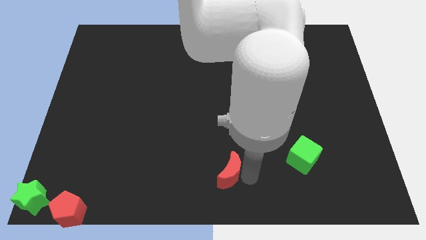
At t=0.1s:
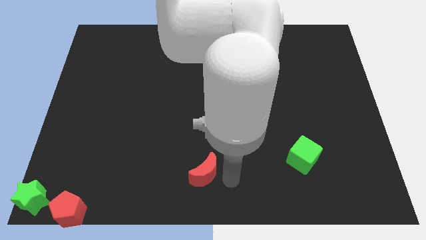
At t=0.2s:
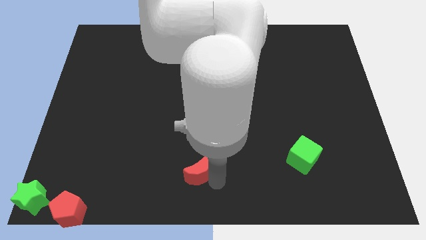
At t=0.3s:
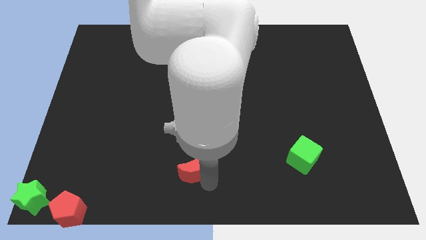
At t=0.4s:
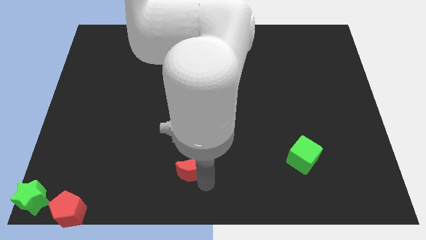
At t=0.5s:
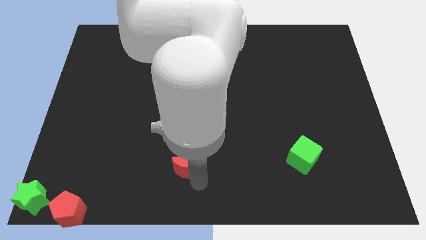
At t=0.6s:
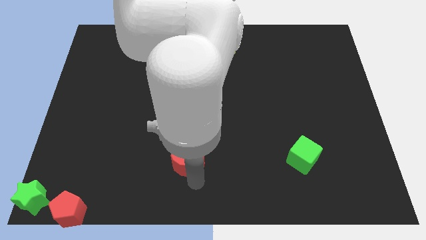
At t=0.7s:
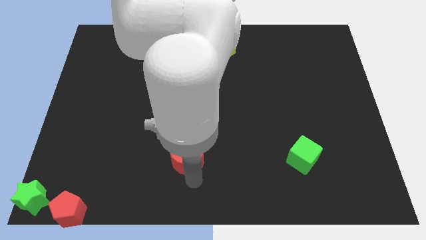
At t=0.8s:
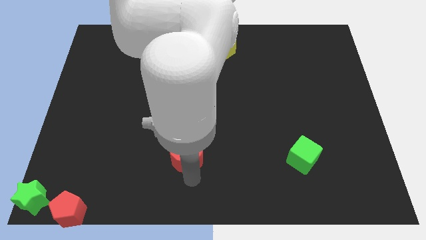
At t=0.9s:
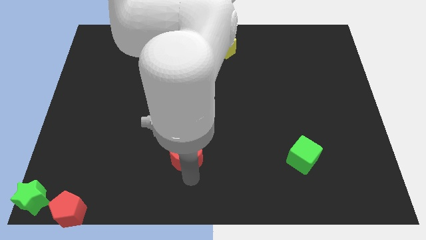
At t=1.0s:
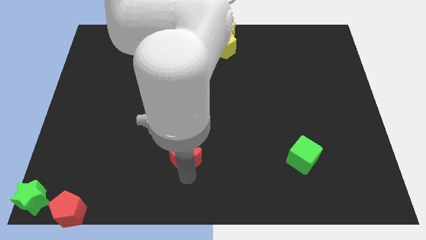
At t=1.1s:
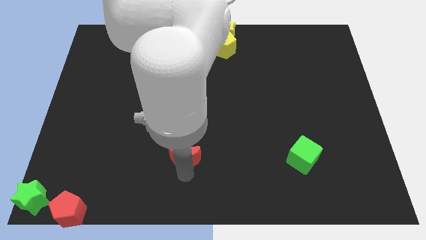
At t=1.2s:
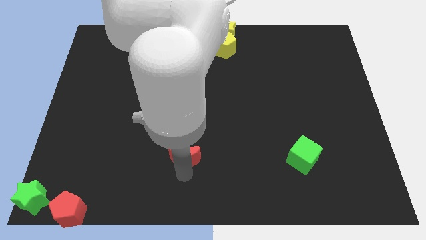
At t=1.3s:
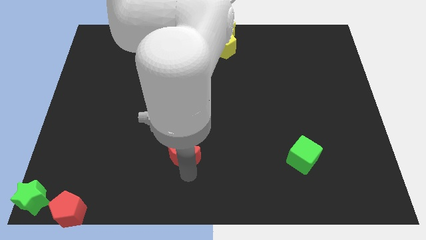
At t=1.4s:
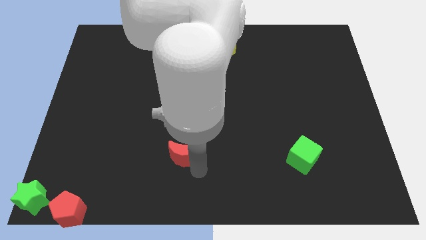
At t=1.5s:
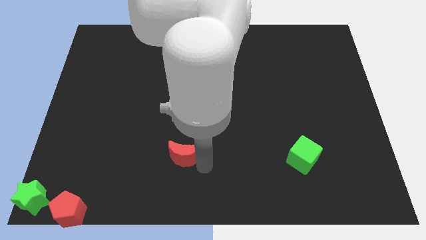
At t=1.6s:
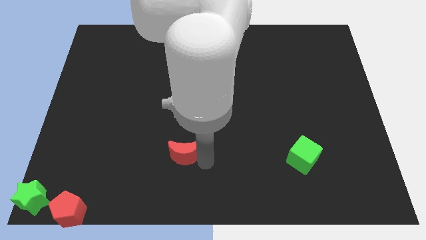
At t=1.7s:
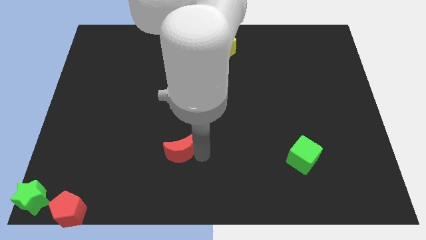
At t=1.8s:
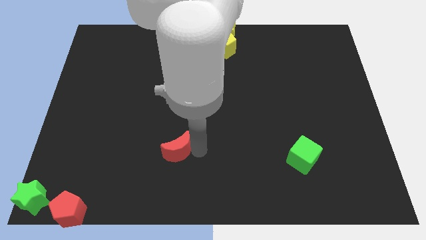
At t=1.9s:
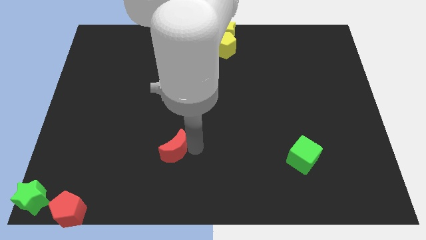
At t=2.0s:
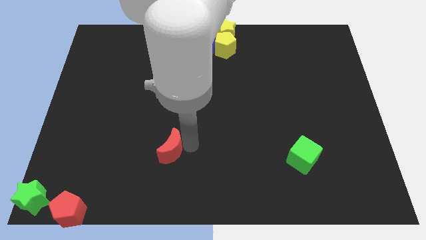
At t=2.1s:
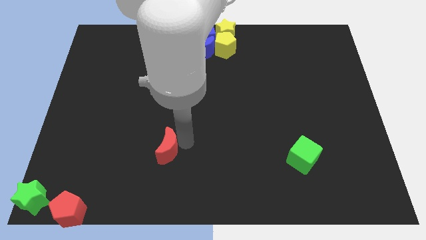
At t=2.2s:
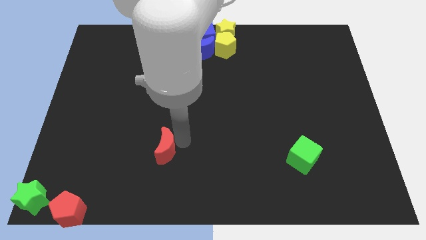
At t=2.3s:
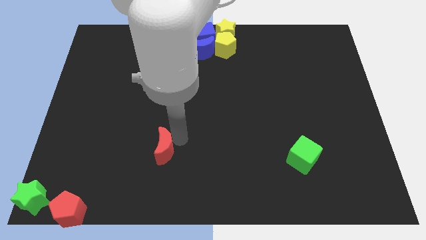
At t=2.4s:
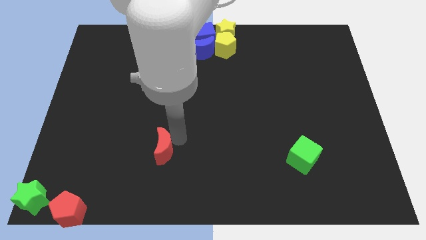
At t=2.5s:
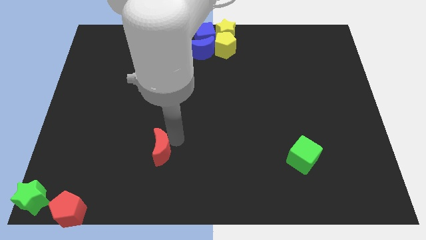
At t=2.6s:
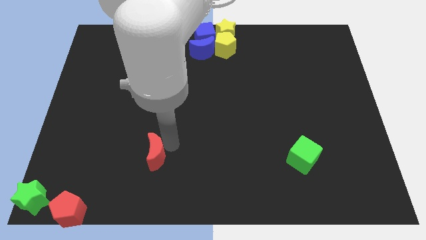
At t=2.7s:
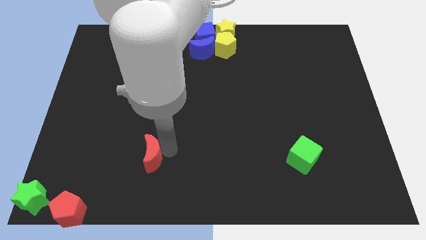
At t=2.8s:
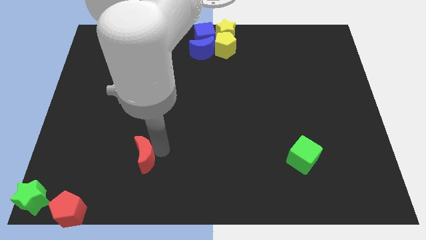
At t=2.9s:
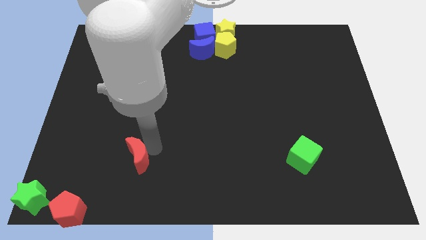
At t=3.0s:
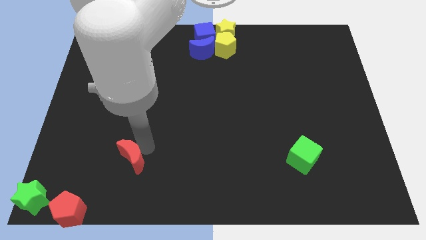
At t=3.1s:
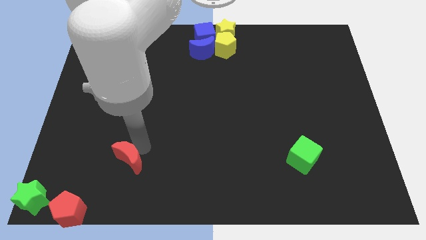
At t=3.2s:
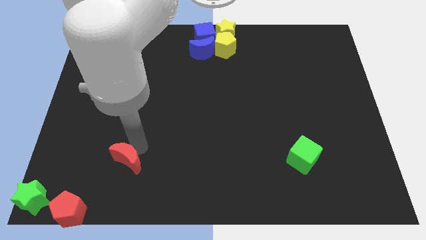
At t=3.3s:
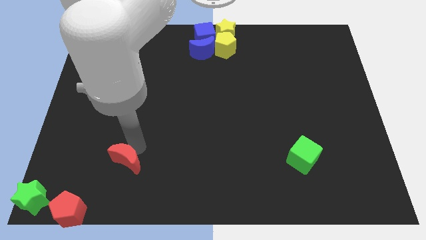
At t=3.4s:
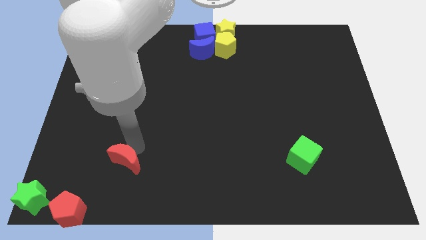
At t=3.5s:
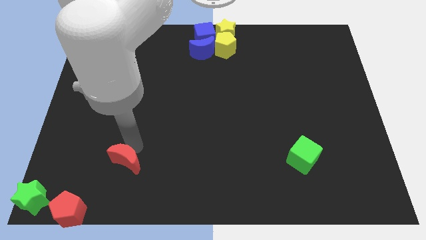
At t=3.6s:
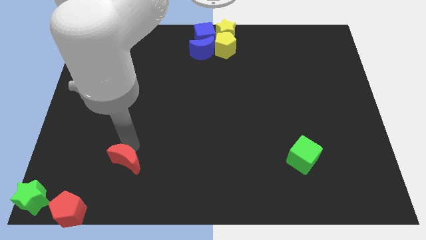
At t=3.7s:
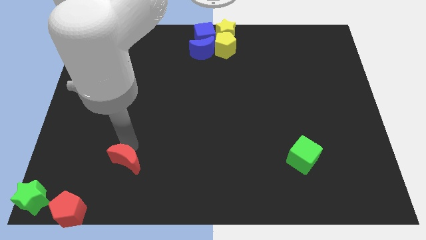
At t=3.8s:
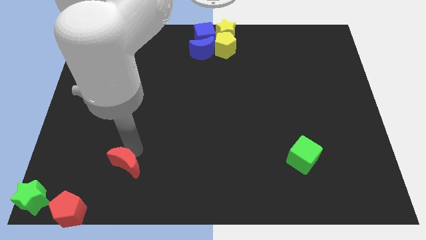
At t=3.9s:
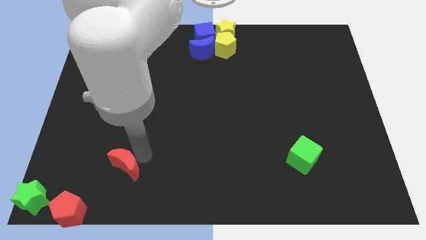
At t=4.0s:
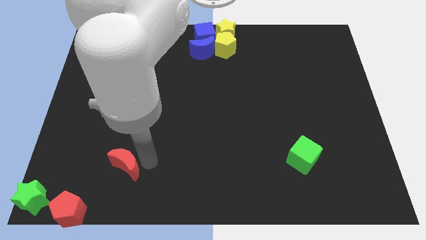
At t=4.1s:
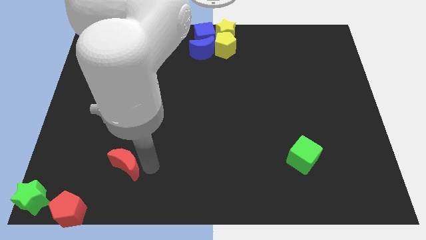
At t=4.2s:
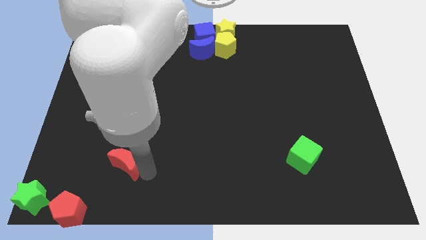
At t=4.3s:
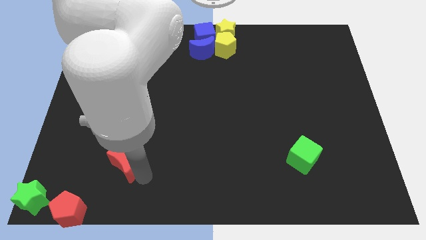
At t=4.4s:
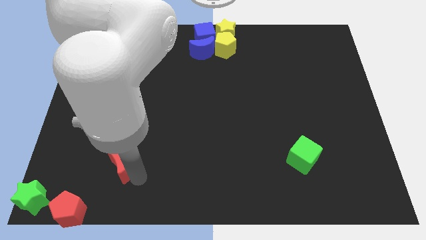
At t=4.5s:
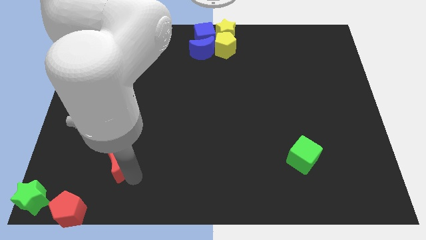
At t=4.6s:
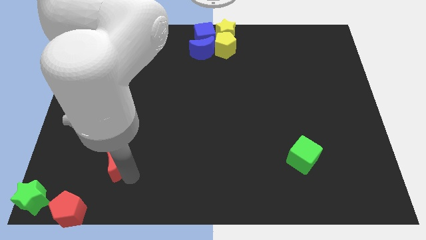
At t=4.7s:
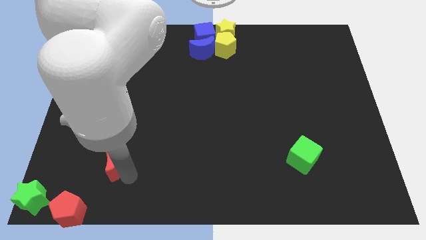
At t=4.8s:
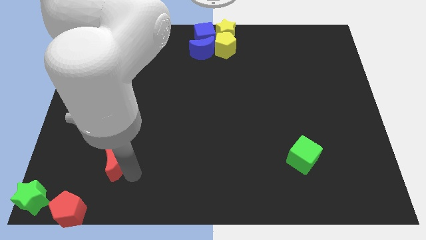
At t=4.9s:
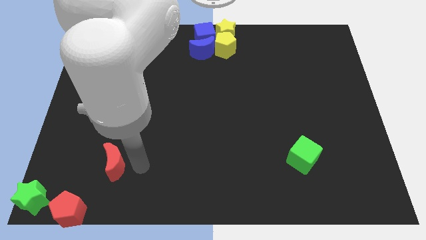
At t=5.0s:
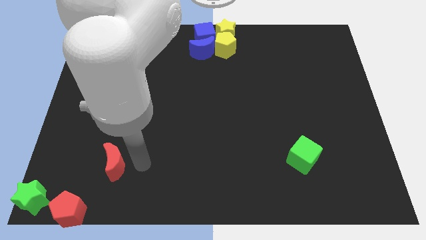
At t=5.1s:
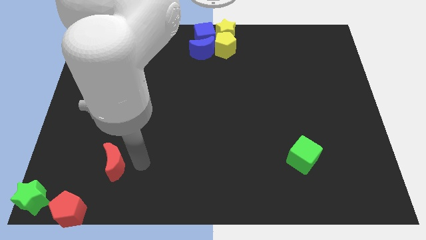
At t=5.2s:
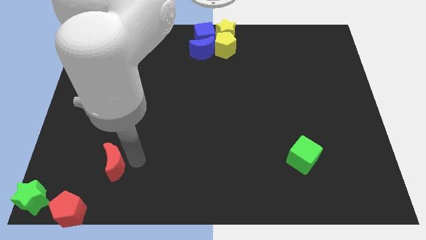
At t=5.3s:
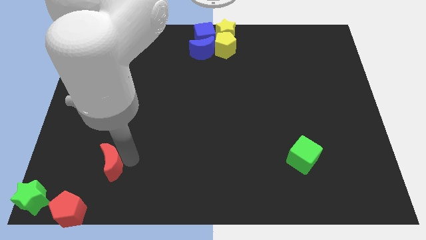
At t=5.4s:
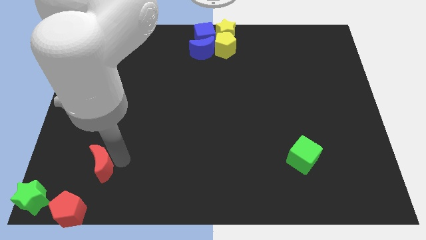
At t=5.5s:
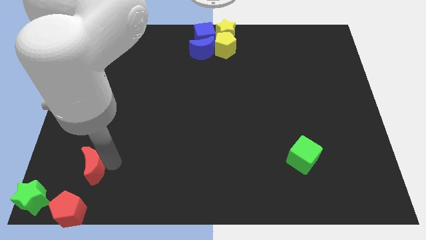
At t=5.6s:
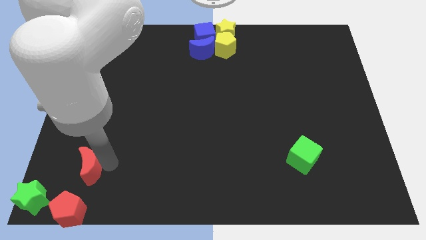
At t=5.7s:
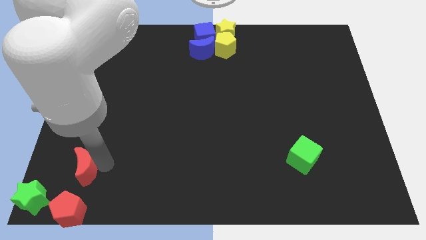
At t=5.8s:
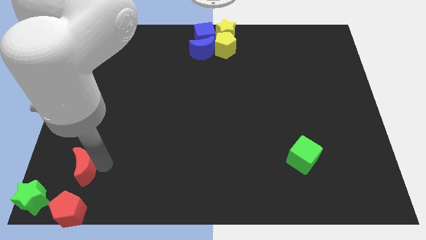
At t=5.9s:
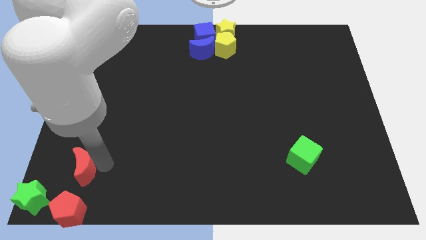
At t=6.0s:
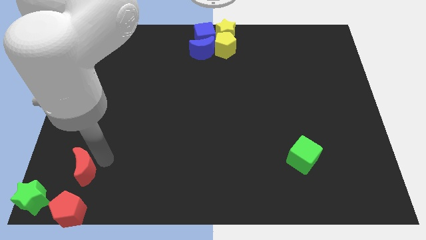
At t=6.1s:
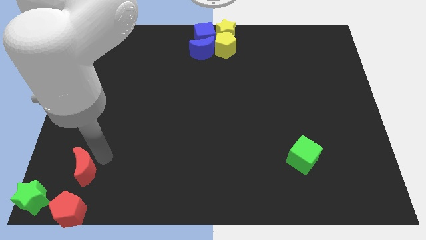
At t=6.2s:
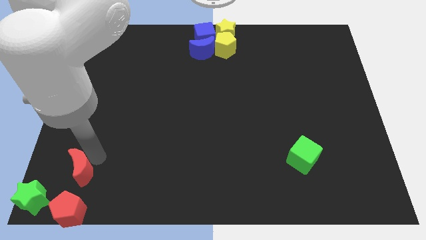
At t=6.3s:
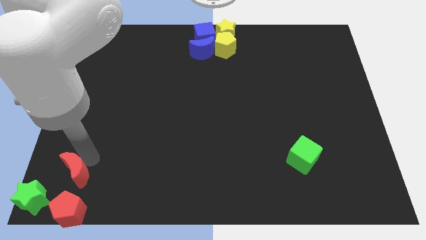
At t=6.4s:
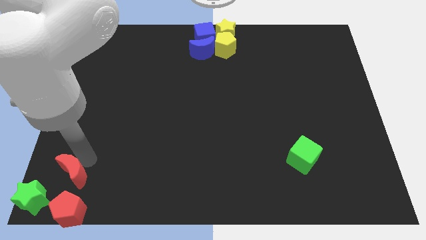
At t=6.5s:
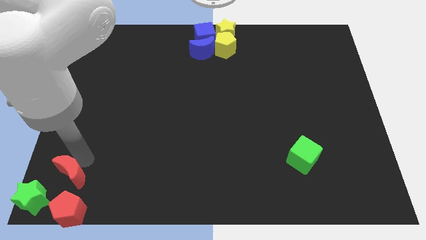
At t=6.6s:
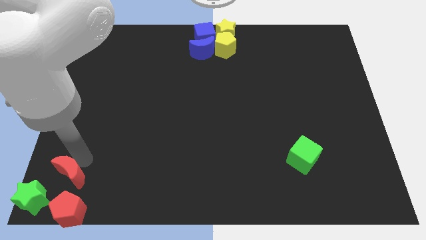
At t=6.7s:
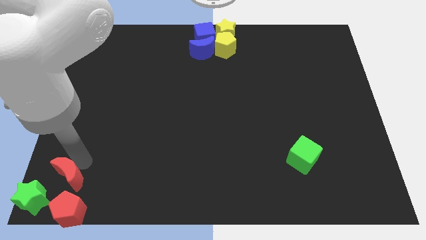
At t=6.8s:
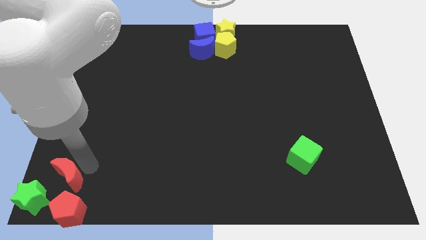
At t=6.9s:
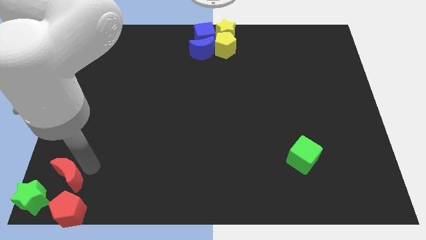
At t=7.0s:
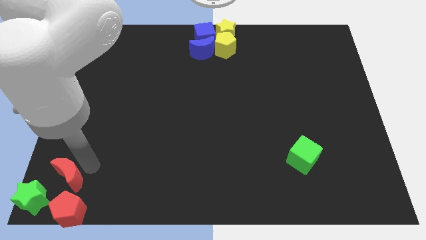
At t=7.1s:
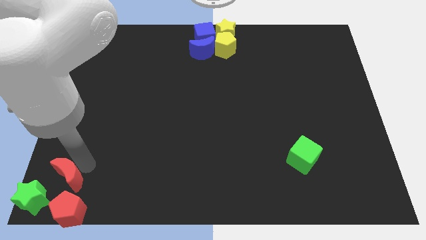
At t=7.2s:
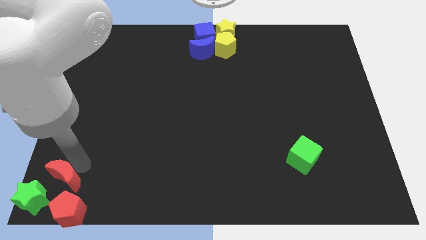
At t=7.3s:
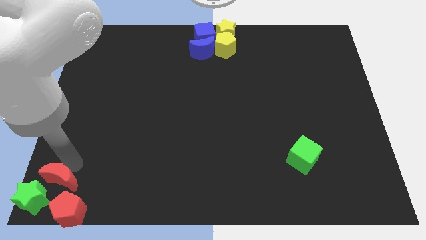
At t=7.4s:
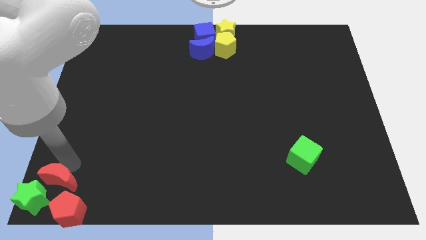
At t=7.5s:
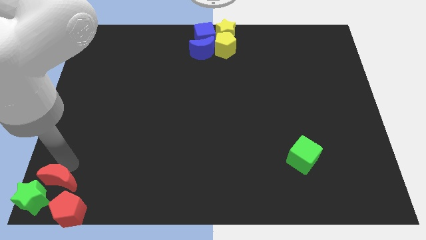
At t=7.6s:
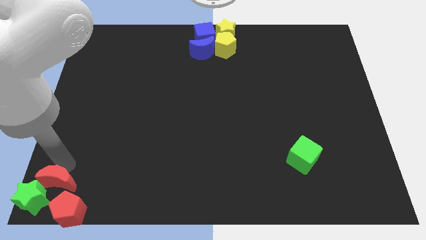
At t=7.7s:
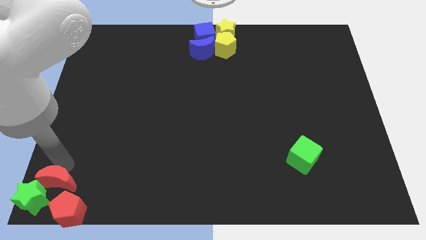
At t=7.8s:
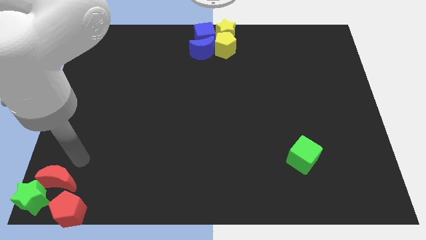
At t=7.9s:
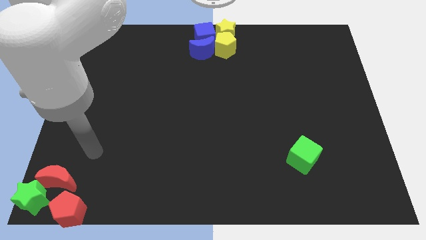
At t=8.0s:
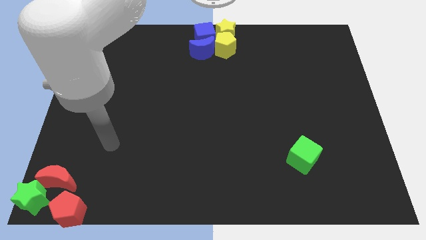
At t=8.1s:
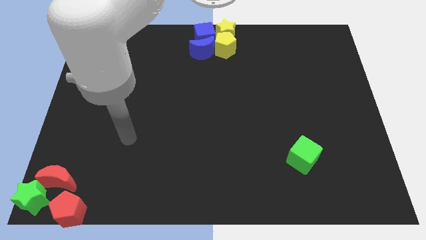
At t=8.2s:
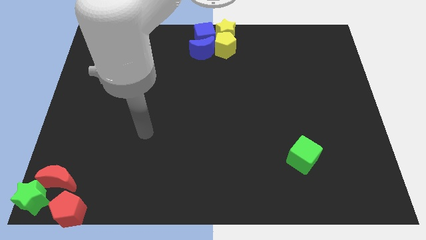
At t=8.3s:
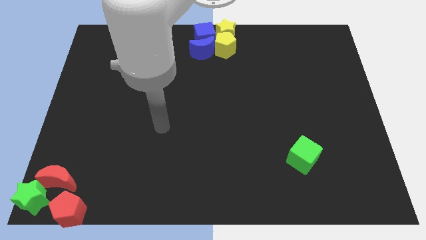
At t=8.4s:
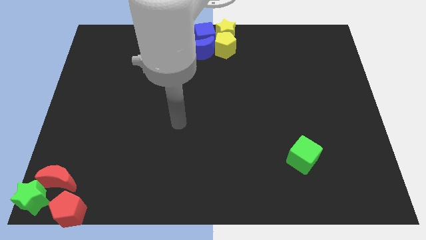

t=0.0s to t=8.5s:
place the red moon above the green star and the red pentagon

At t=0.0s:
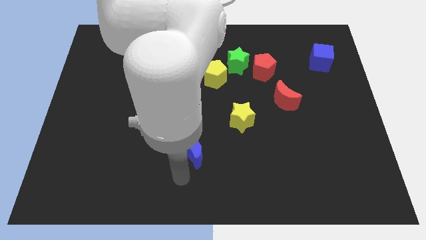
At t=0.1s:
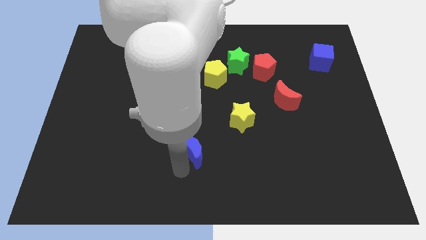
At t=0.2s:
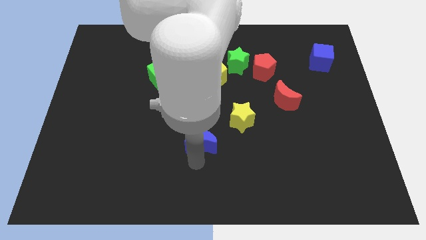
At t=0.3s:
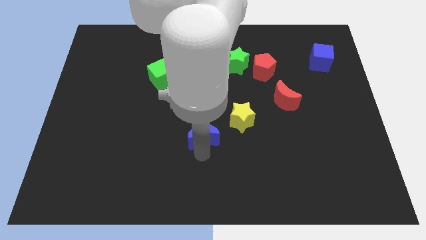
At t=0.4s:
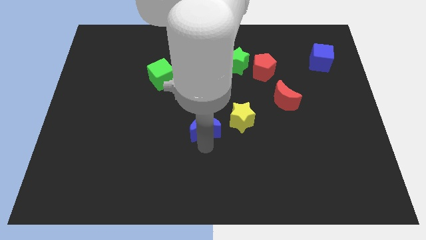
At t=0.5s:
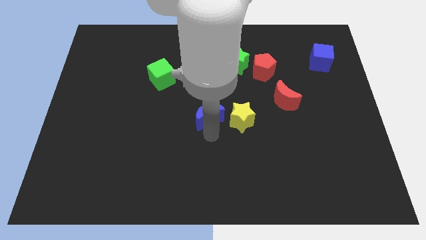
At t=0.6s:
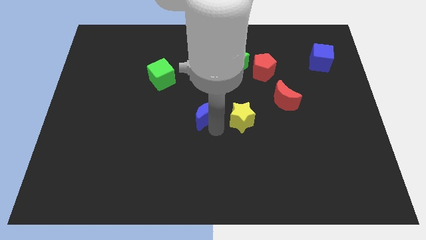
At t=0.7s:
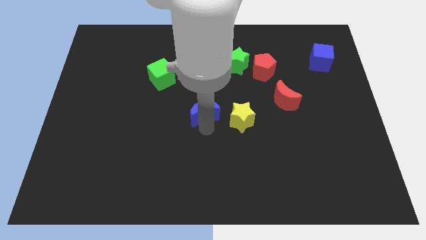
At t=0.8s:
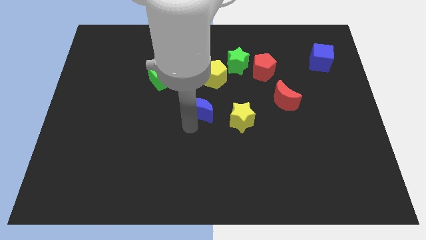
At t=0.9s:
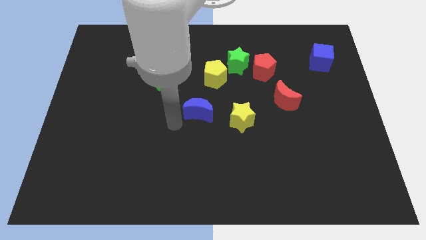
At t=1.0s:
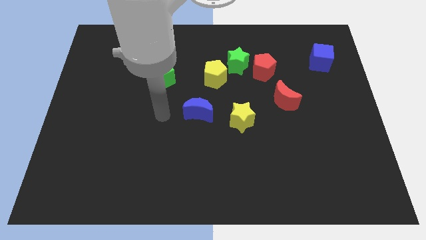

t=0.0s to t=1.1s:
place the blue moon to the left side of the yellow star
